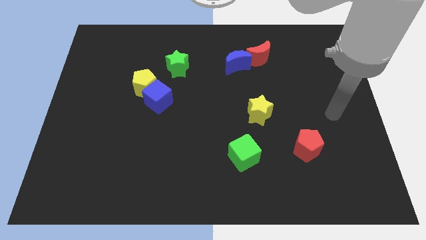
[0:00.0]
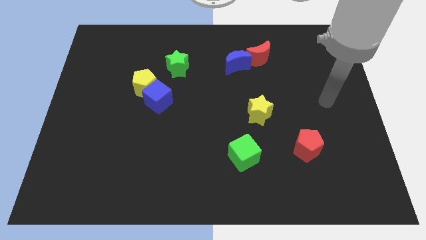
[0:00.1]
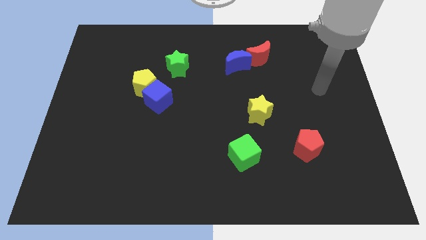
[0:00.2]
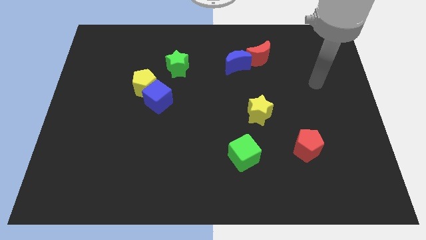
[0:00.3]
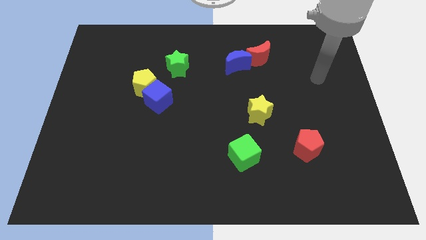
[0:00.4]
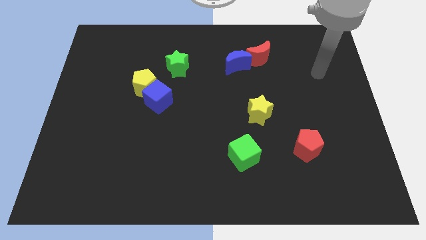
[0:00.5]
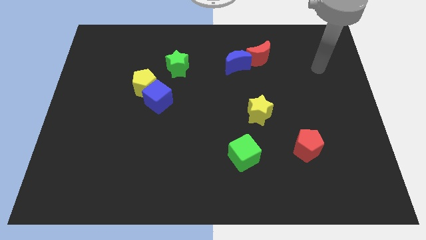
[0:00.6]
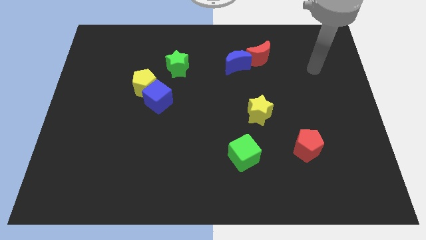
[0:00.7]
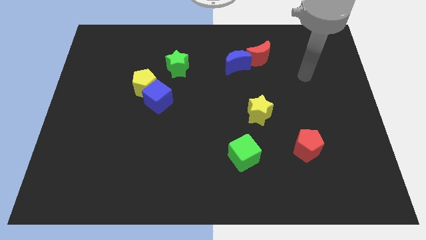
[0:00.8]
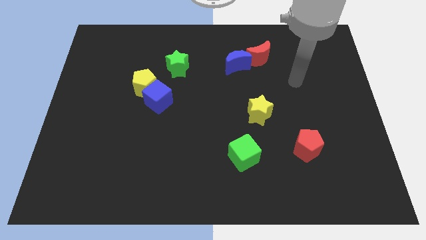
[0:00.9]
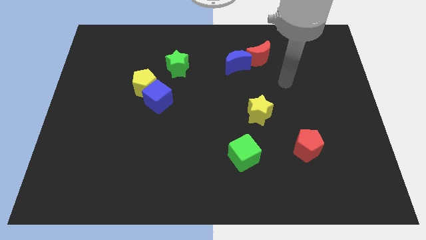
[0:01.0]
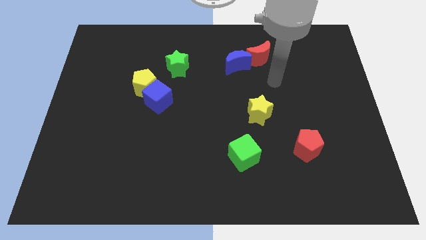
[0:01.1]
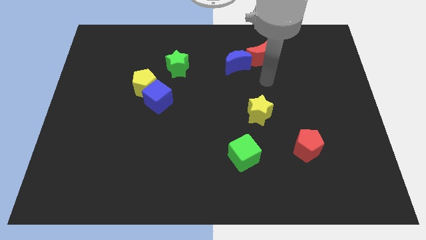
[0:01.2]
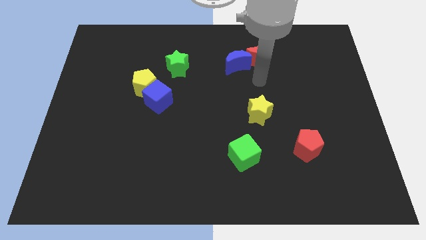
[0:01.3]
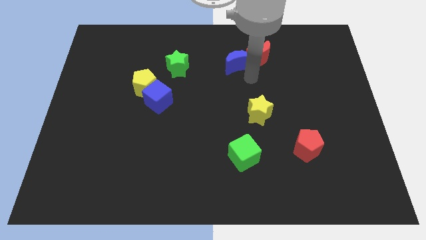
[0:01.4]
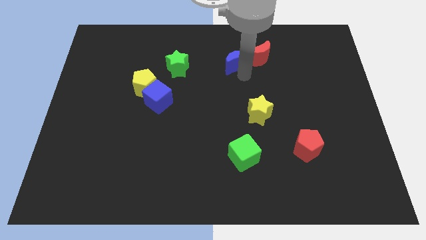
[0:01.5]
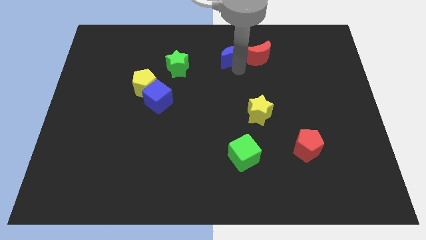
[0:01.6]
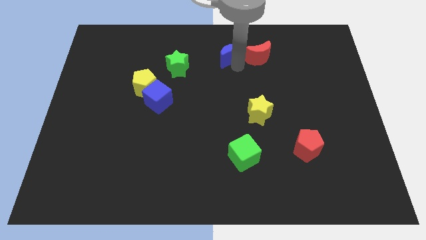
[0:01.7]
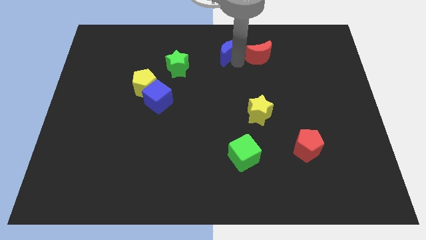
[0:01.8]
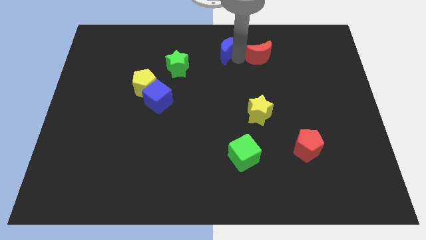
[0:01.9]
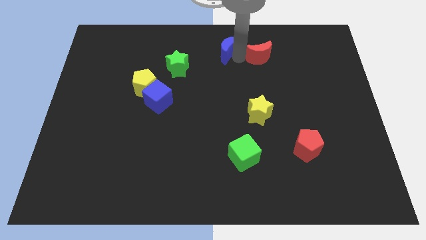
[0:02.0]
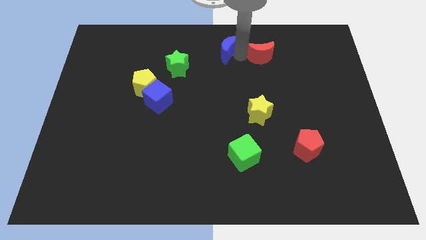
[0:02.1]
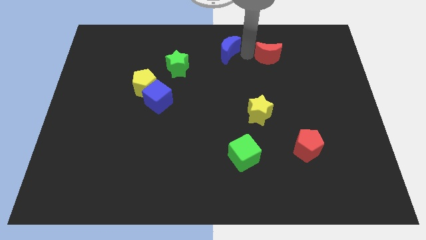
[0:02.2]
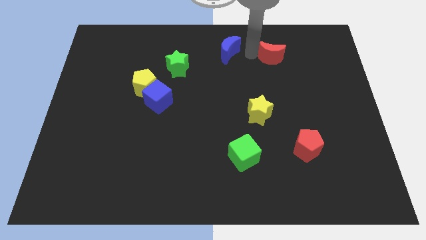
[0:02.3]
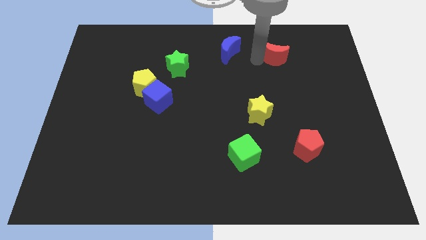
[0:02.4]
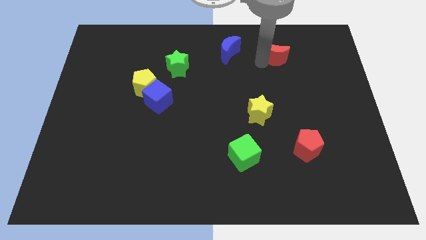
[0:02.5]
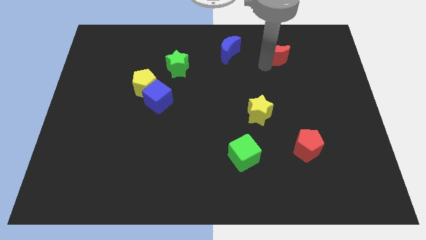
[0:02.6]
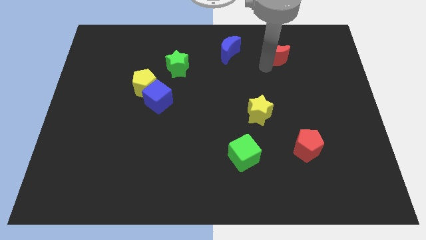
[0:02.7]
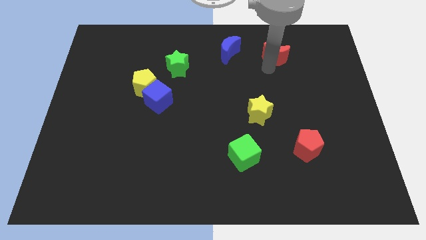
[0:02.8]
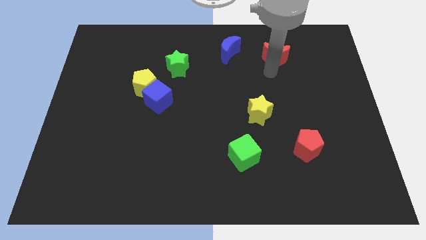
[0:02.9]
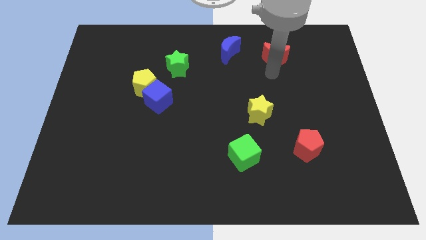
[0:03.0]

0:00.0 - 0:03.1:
separate red and blue moons

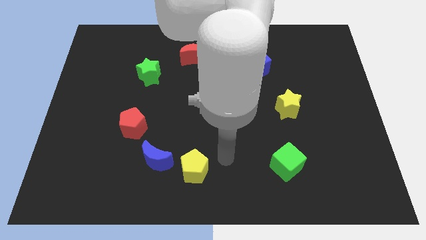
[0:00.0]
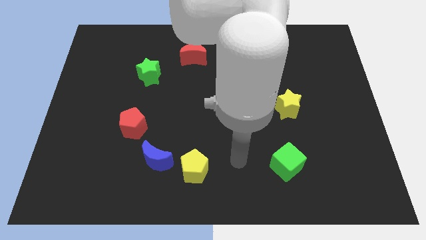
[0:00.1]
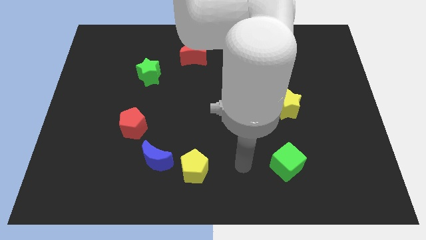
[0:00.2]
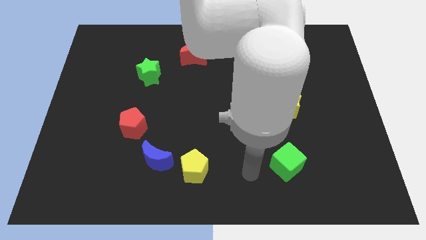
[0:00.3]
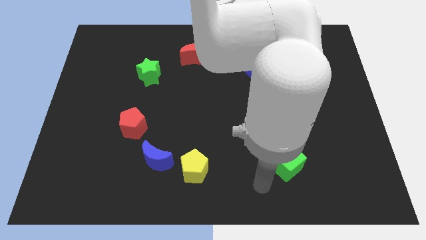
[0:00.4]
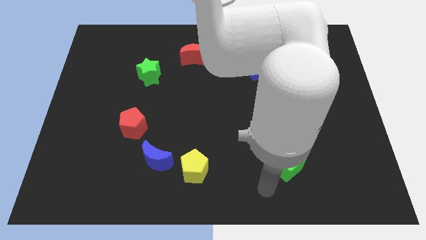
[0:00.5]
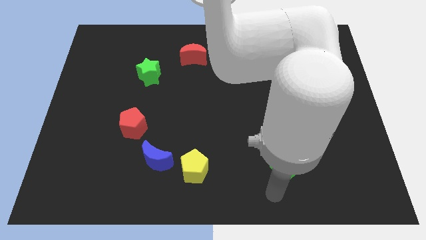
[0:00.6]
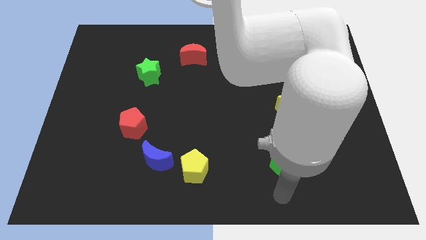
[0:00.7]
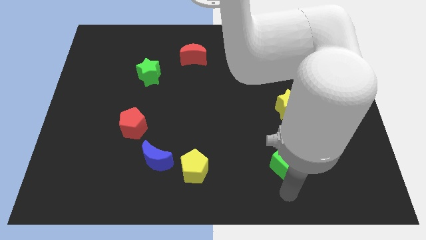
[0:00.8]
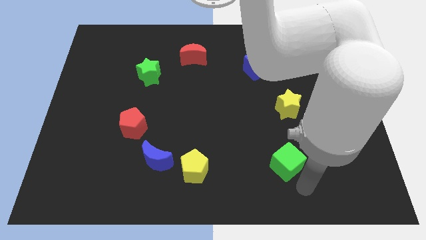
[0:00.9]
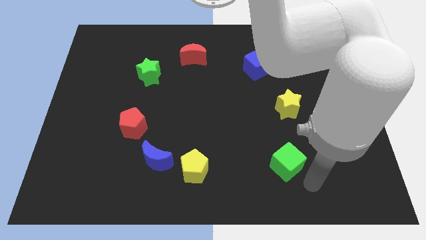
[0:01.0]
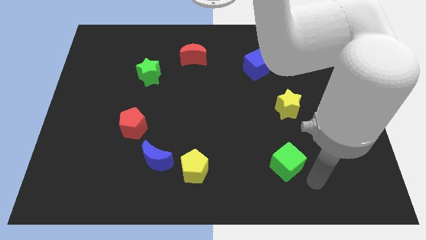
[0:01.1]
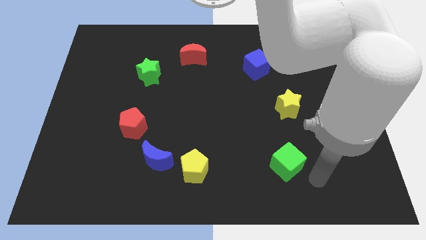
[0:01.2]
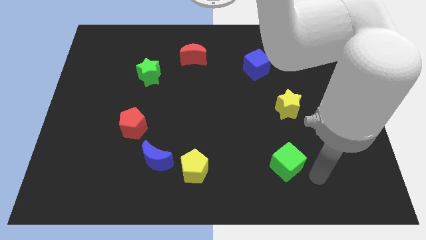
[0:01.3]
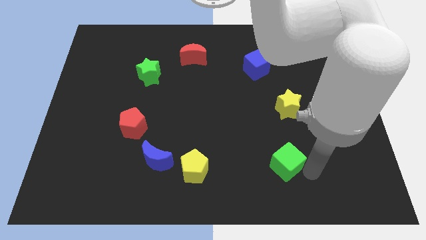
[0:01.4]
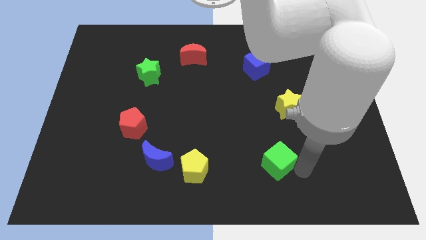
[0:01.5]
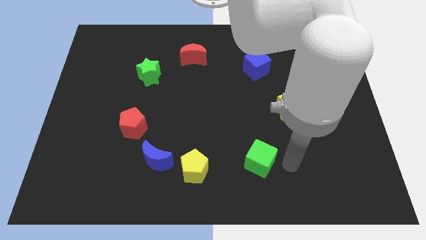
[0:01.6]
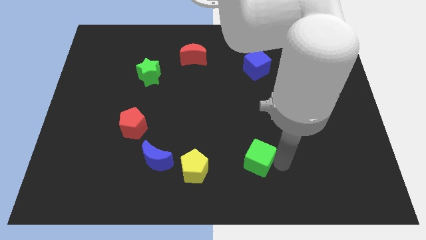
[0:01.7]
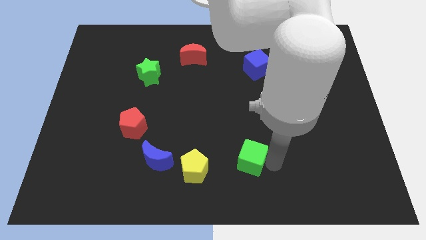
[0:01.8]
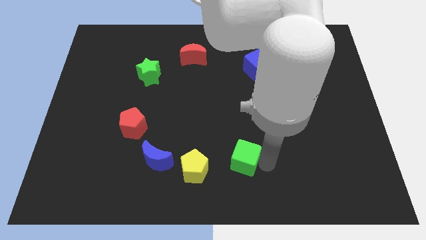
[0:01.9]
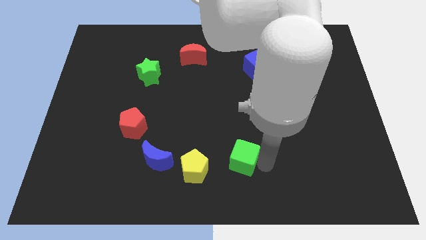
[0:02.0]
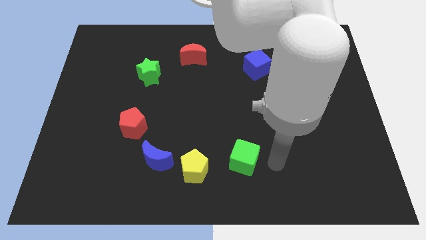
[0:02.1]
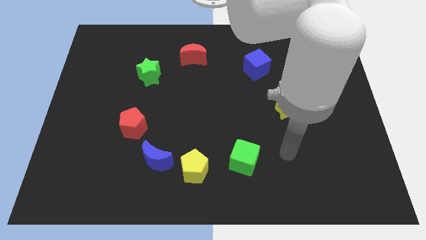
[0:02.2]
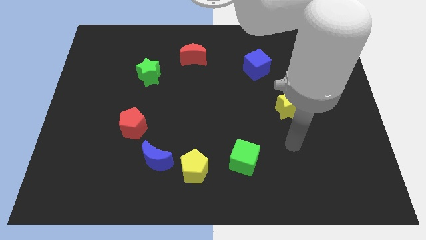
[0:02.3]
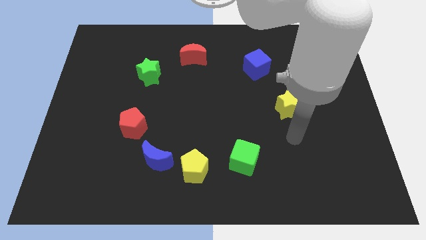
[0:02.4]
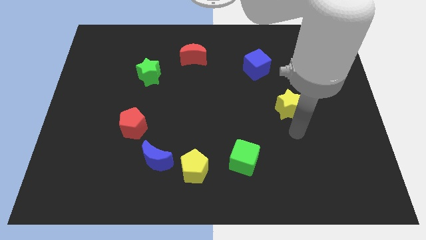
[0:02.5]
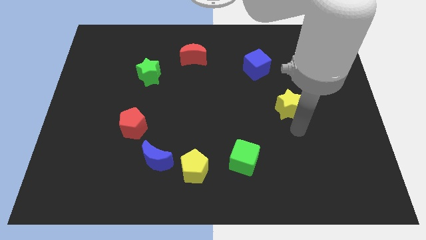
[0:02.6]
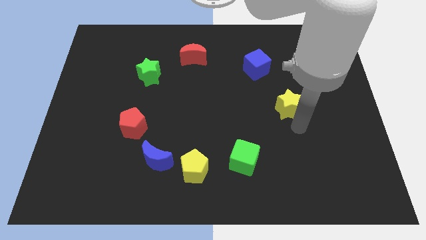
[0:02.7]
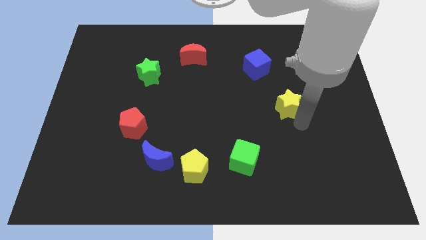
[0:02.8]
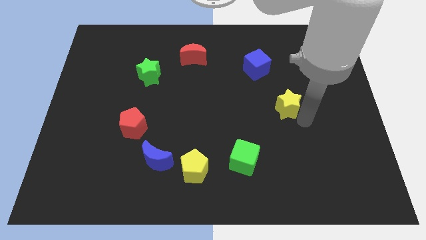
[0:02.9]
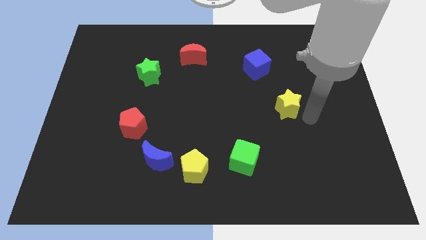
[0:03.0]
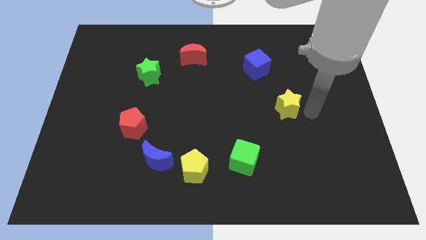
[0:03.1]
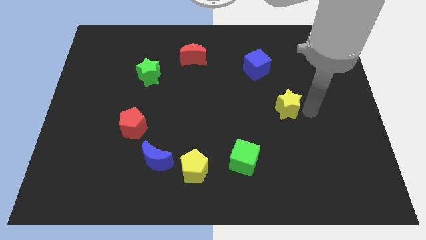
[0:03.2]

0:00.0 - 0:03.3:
slide the green cube towards the yellow pentagon

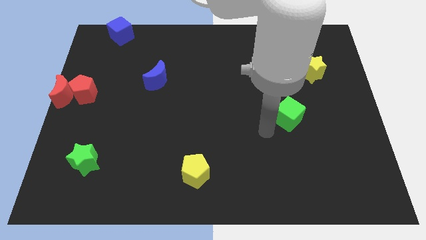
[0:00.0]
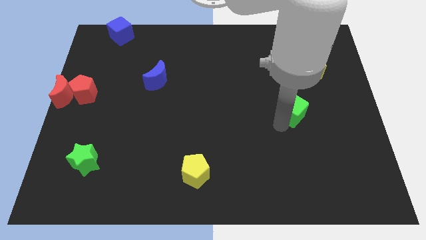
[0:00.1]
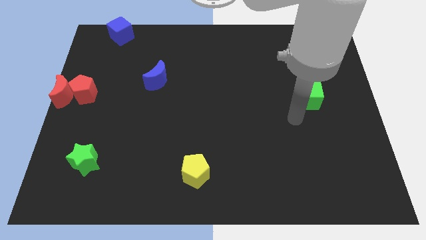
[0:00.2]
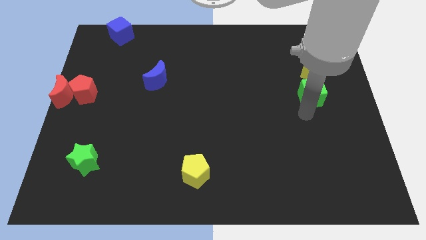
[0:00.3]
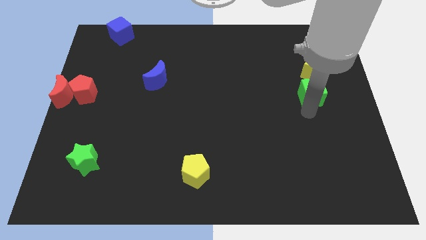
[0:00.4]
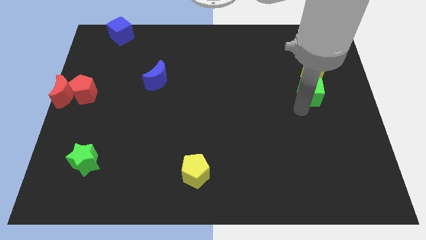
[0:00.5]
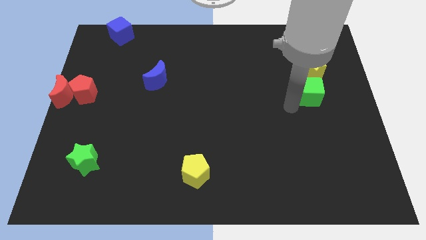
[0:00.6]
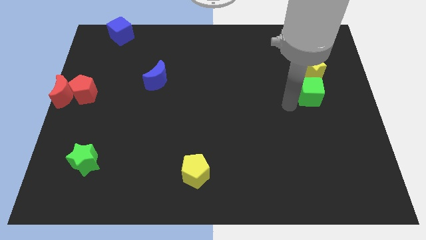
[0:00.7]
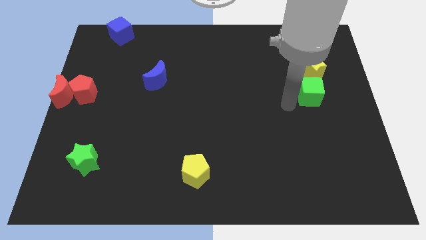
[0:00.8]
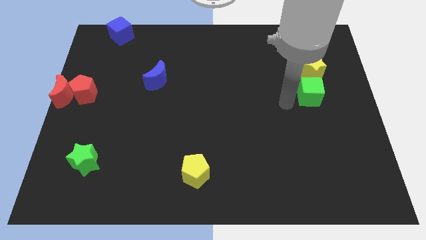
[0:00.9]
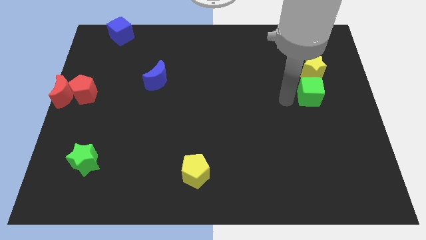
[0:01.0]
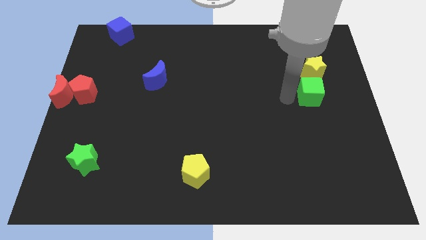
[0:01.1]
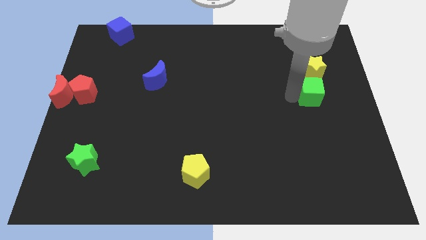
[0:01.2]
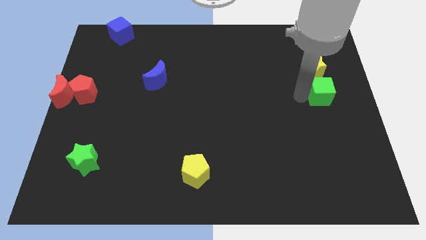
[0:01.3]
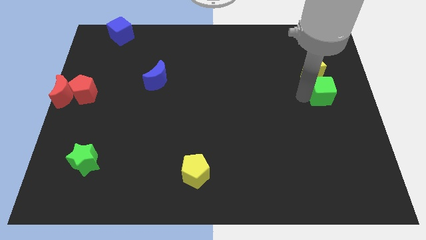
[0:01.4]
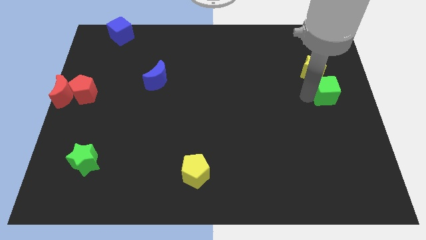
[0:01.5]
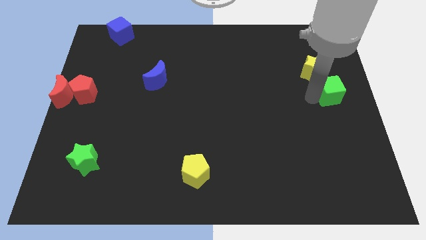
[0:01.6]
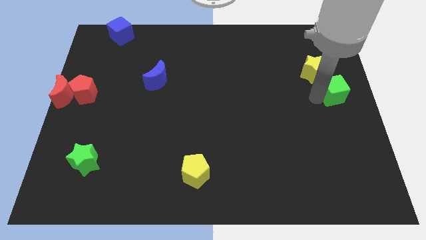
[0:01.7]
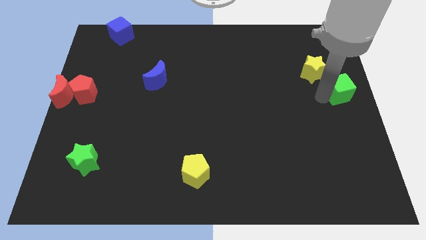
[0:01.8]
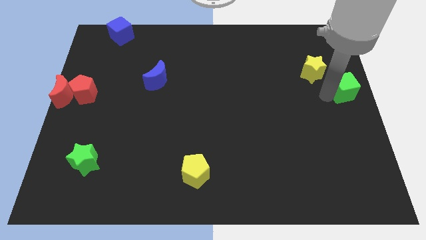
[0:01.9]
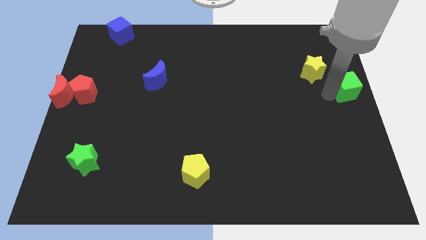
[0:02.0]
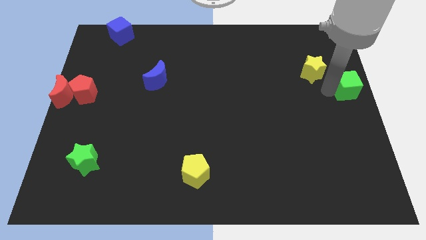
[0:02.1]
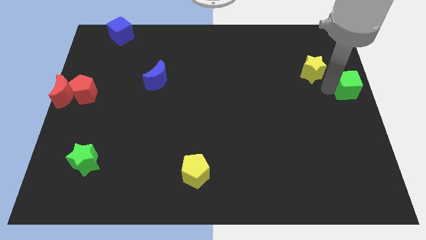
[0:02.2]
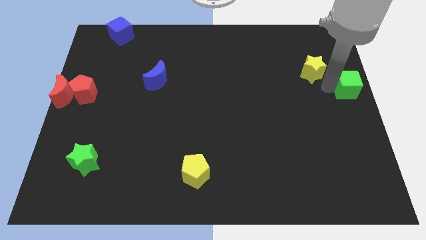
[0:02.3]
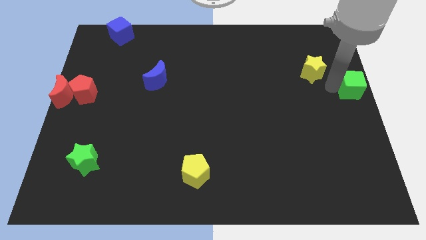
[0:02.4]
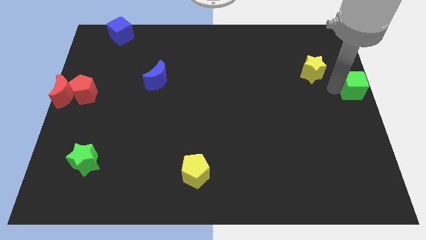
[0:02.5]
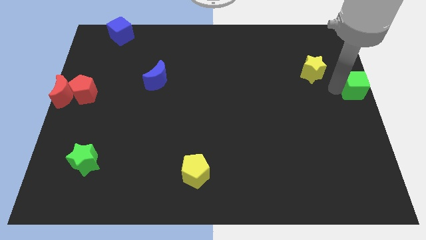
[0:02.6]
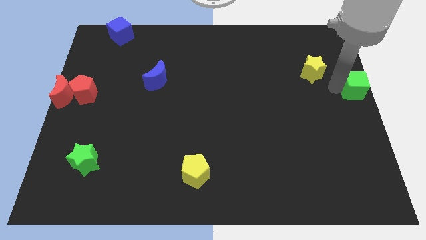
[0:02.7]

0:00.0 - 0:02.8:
place the green cube right to the yellow star
